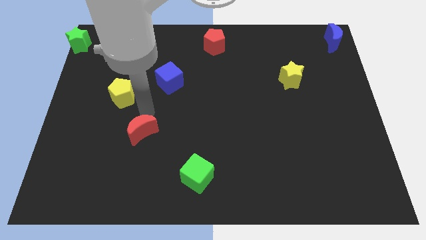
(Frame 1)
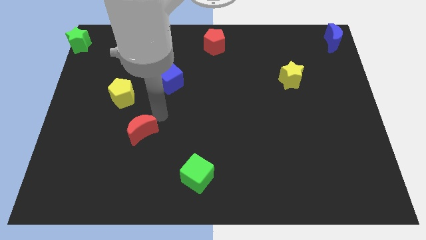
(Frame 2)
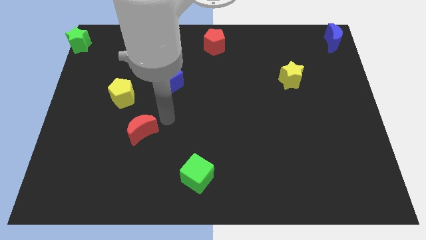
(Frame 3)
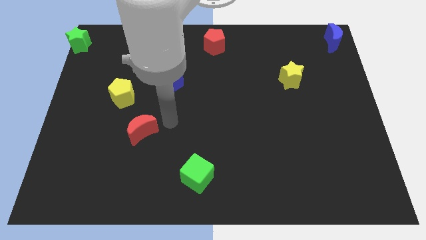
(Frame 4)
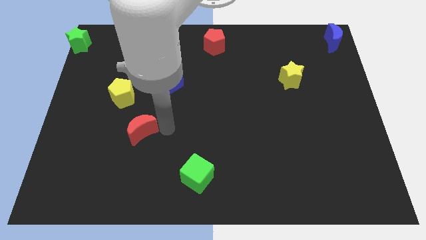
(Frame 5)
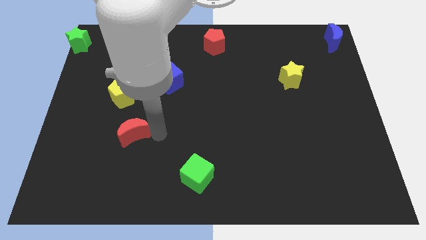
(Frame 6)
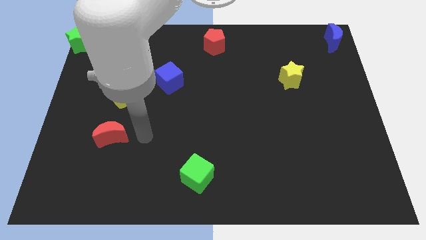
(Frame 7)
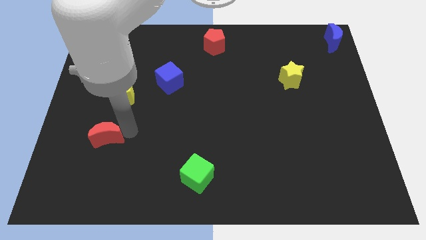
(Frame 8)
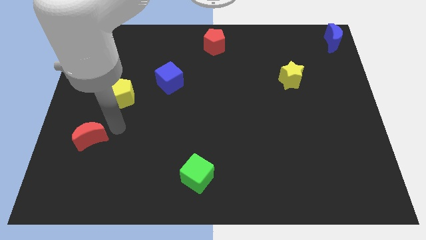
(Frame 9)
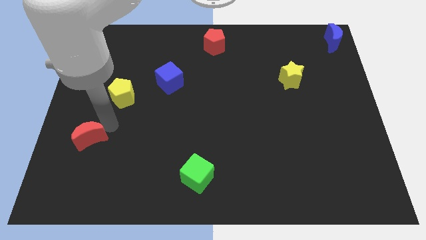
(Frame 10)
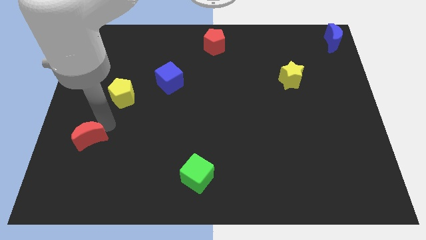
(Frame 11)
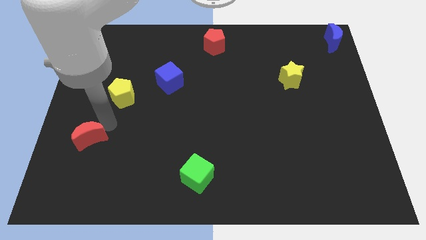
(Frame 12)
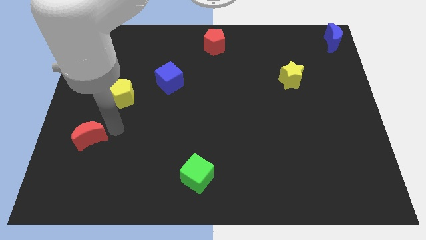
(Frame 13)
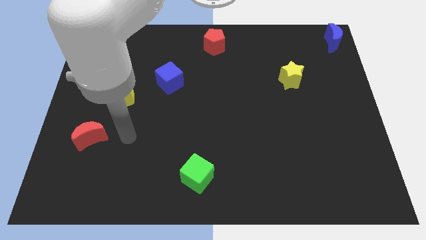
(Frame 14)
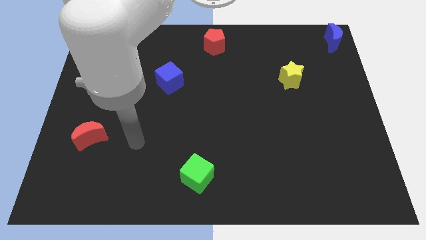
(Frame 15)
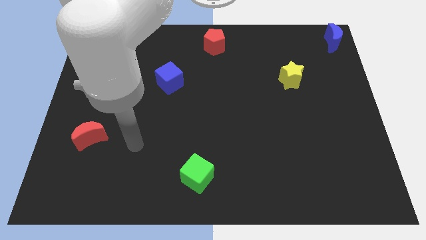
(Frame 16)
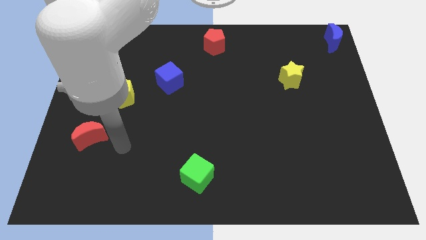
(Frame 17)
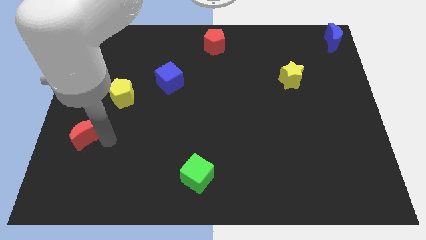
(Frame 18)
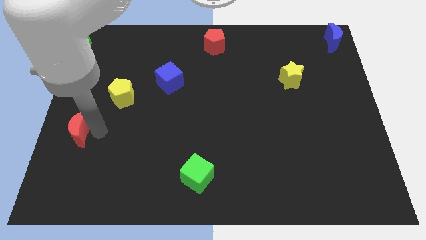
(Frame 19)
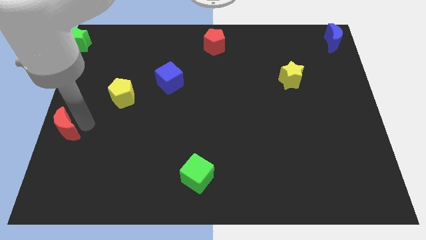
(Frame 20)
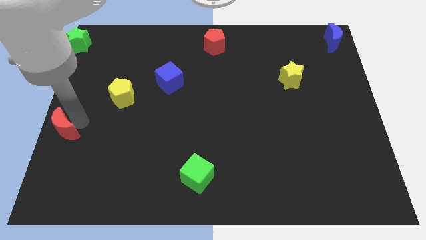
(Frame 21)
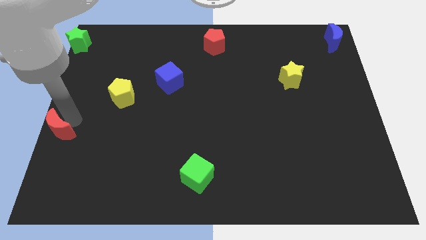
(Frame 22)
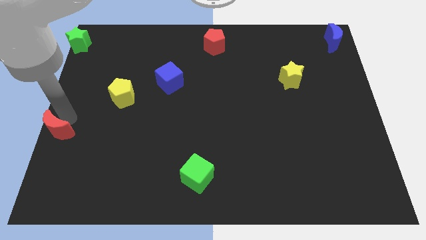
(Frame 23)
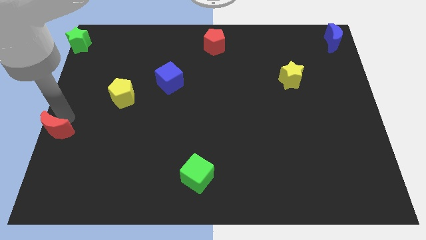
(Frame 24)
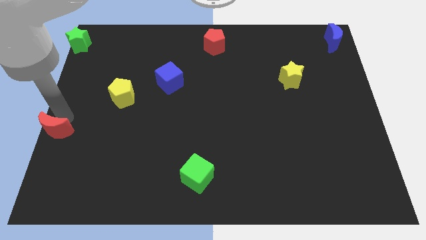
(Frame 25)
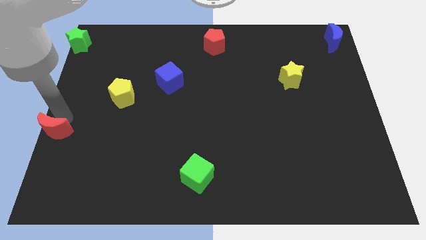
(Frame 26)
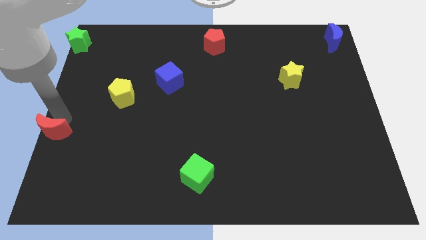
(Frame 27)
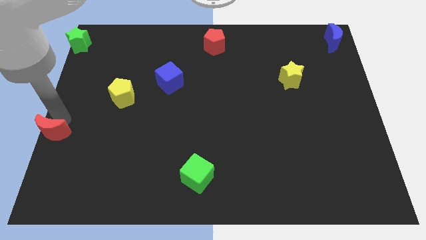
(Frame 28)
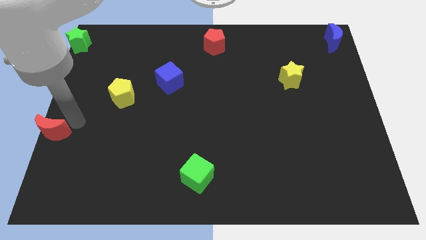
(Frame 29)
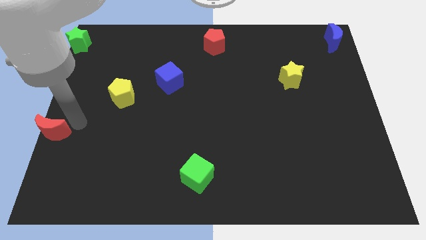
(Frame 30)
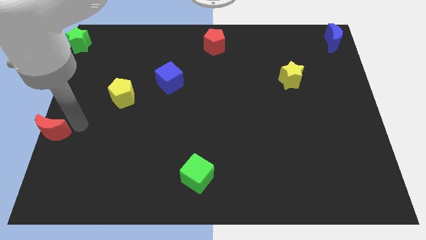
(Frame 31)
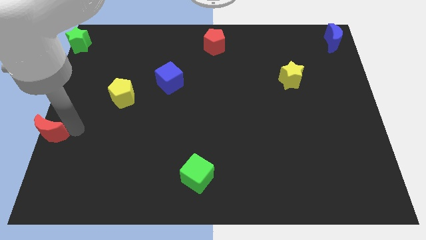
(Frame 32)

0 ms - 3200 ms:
place the red crescent at the center left of the board

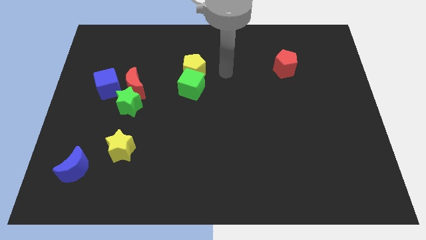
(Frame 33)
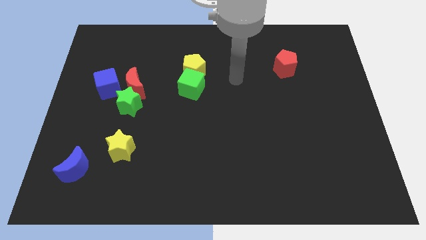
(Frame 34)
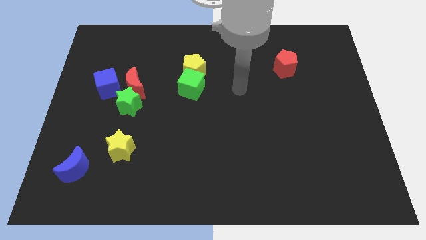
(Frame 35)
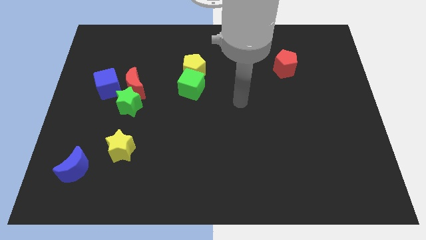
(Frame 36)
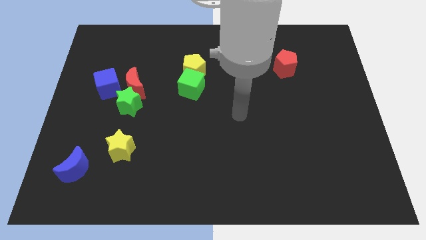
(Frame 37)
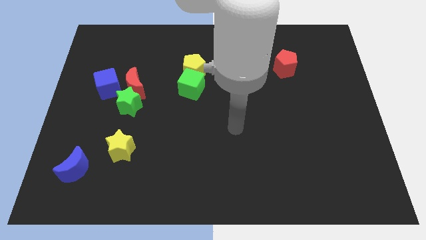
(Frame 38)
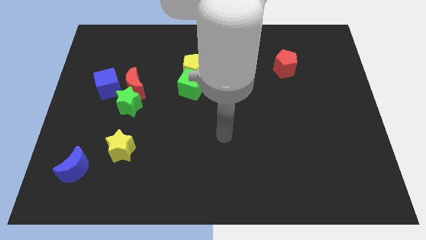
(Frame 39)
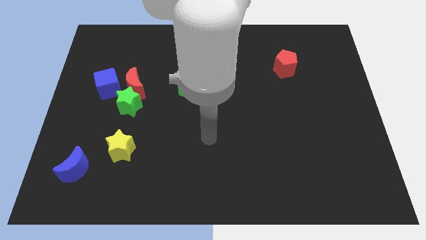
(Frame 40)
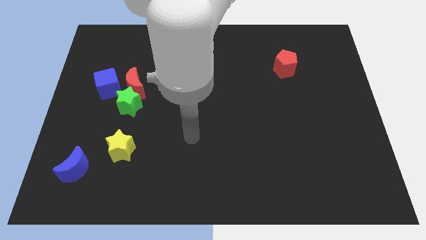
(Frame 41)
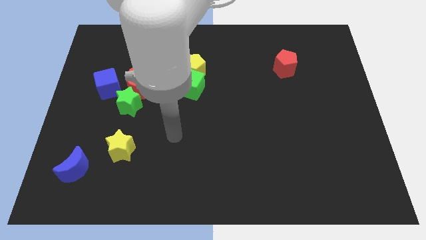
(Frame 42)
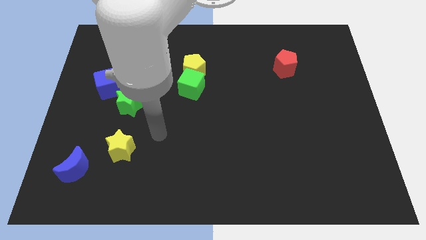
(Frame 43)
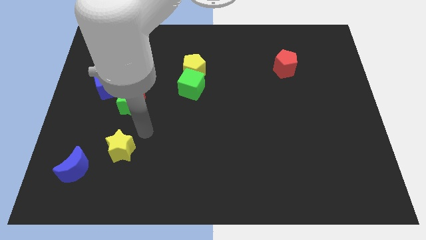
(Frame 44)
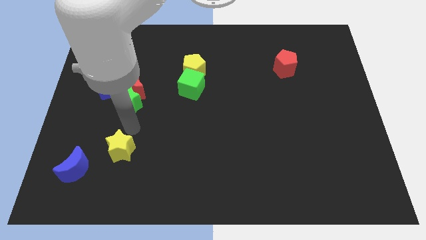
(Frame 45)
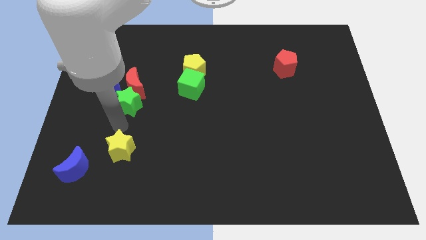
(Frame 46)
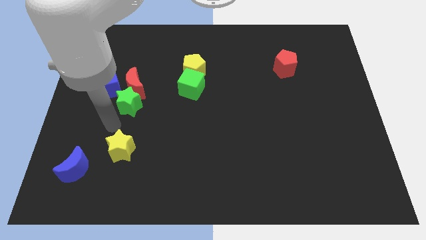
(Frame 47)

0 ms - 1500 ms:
place your arm to the top of the yellow star

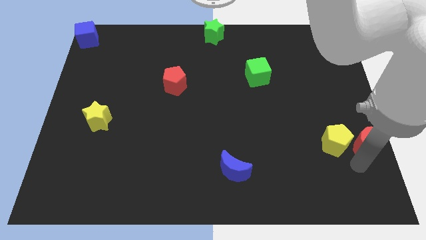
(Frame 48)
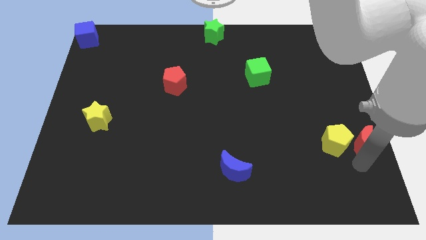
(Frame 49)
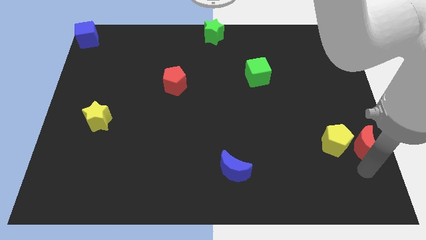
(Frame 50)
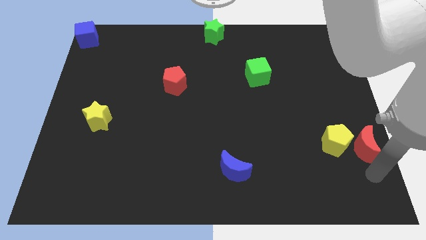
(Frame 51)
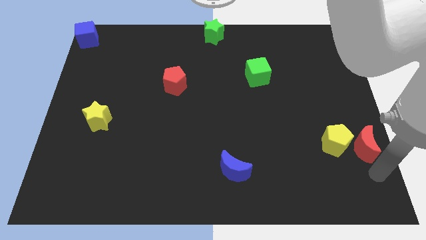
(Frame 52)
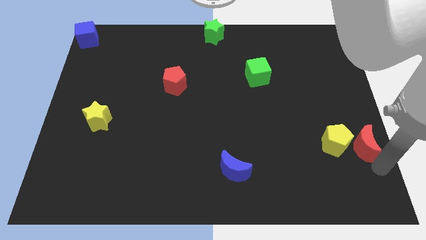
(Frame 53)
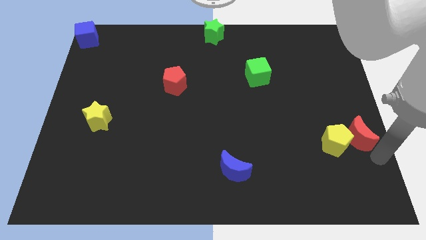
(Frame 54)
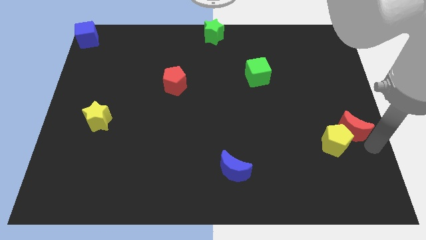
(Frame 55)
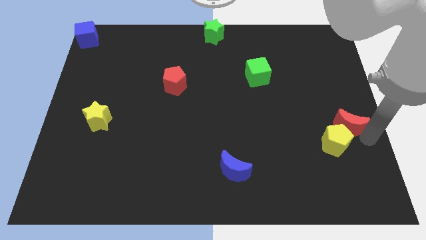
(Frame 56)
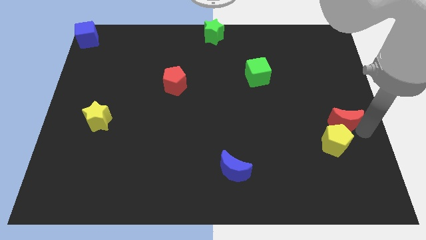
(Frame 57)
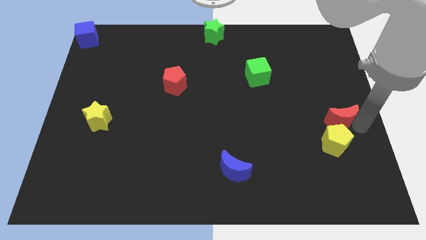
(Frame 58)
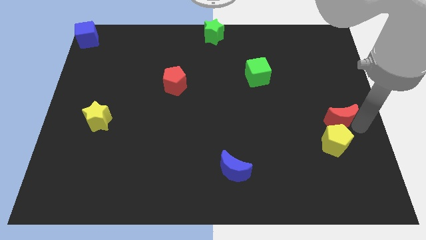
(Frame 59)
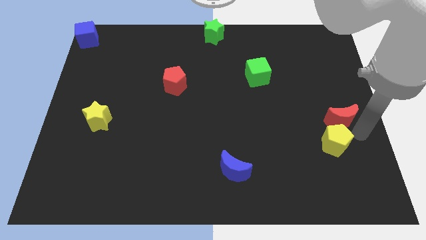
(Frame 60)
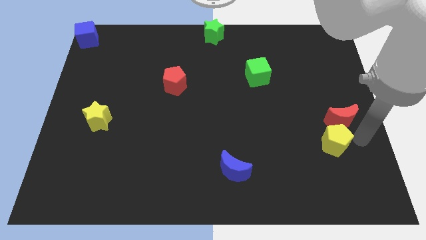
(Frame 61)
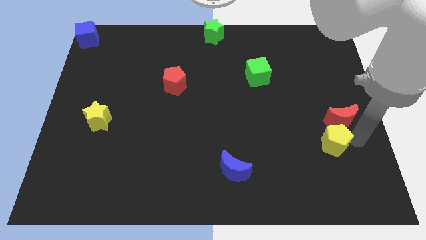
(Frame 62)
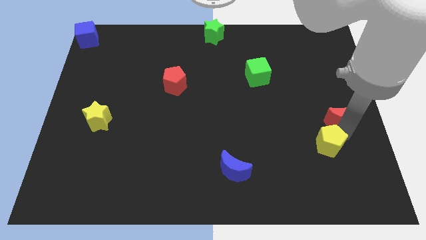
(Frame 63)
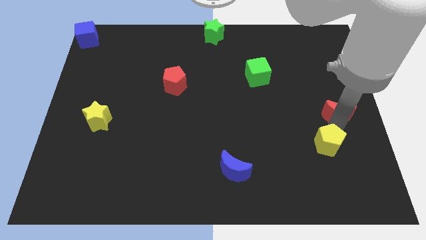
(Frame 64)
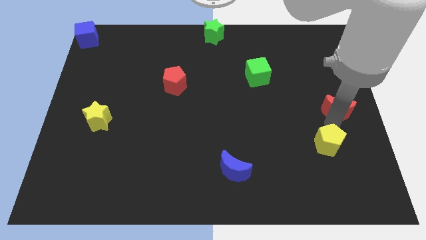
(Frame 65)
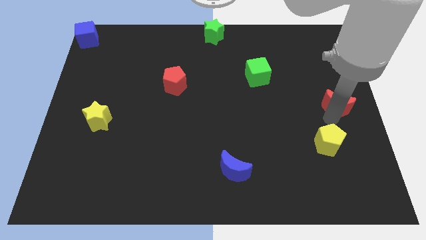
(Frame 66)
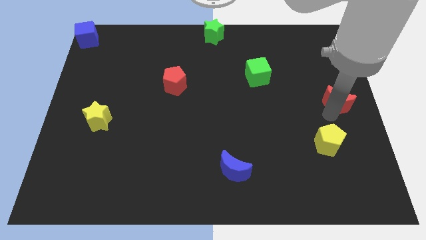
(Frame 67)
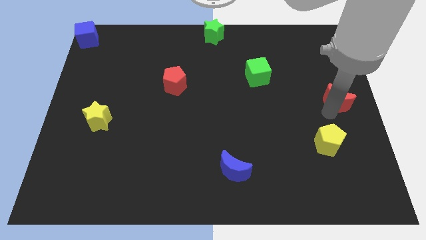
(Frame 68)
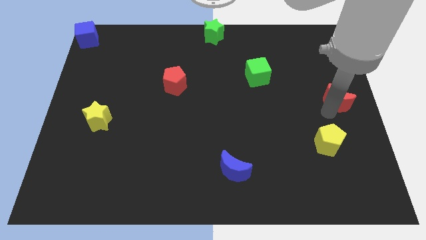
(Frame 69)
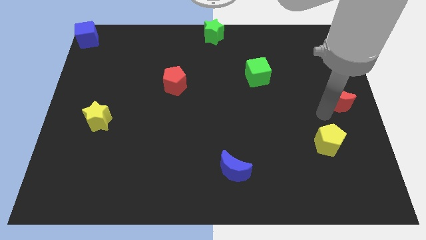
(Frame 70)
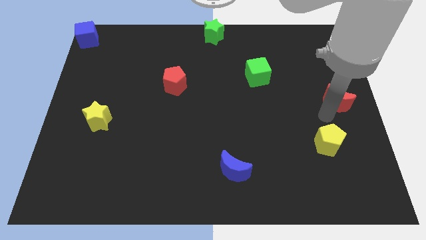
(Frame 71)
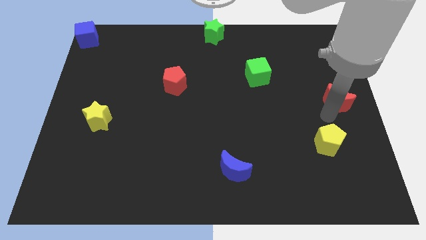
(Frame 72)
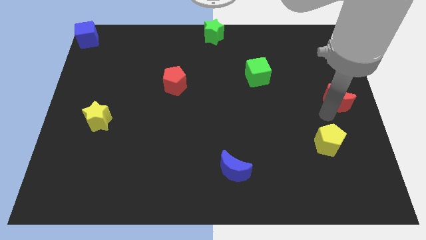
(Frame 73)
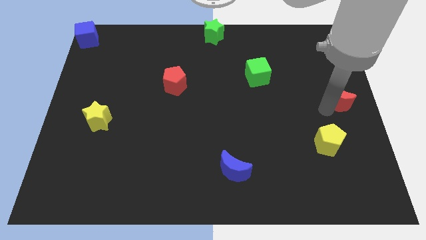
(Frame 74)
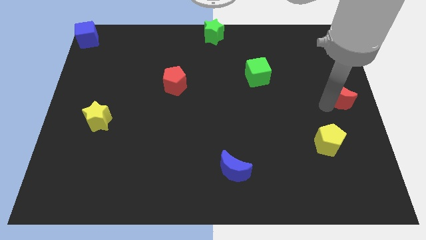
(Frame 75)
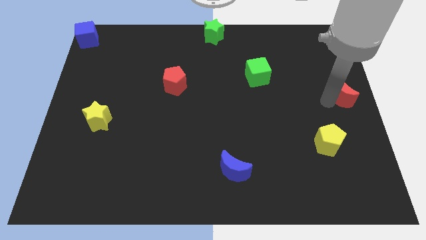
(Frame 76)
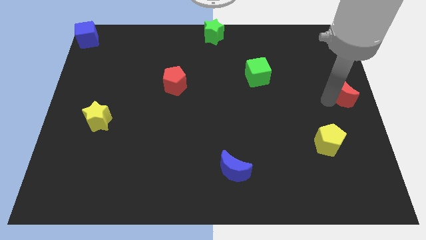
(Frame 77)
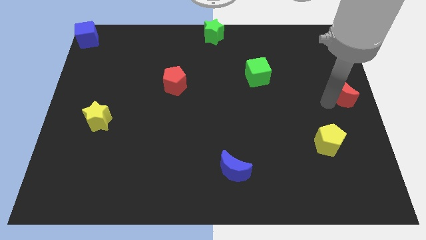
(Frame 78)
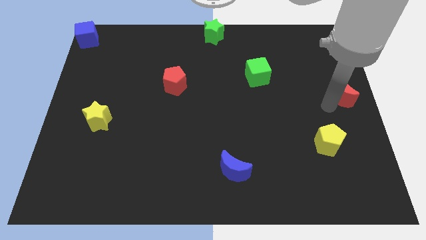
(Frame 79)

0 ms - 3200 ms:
push red moon upwards to the top

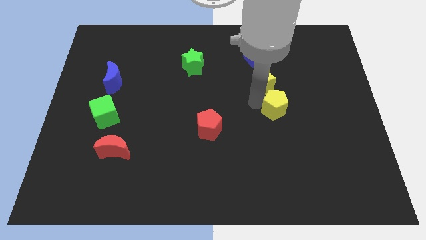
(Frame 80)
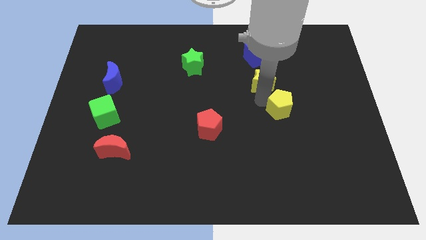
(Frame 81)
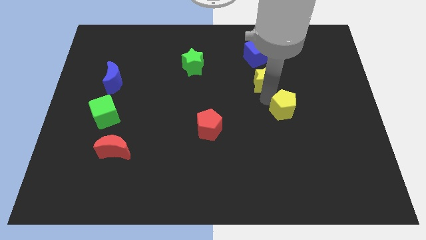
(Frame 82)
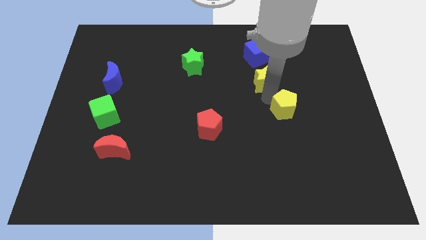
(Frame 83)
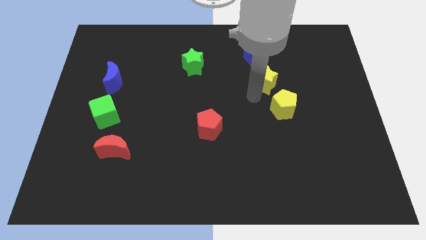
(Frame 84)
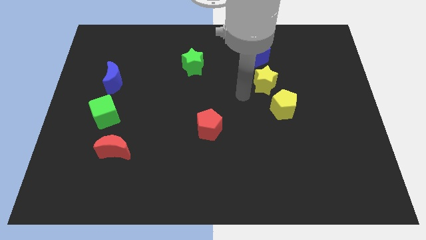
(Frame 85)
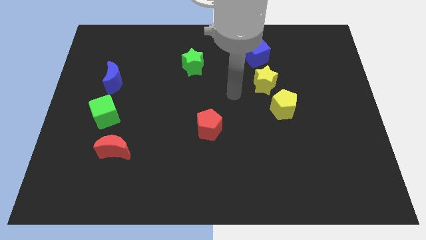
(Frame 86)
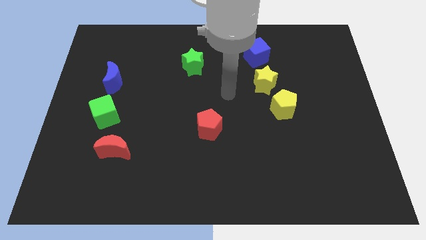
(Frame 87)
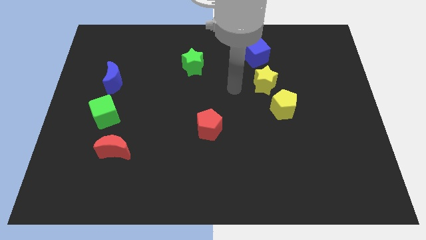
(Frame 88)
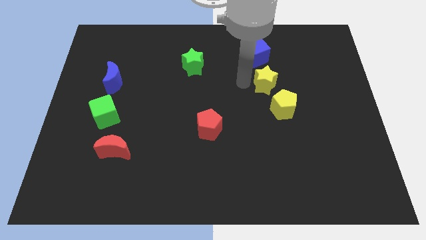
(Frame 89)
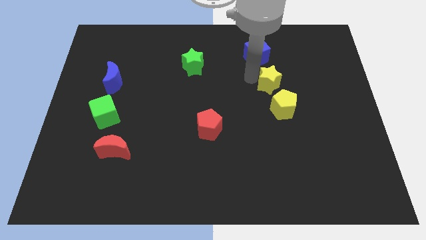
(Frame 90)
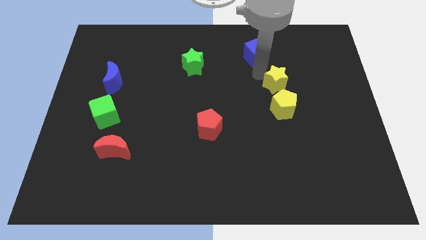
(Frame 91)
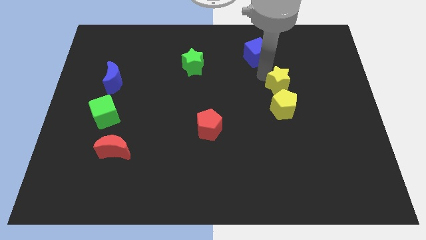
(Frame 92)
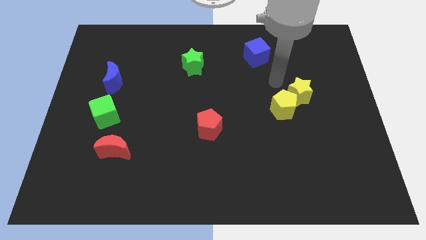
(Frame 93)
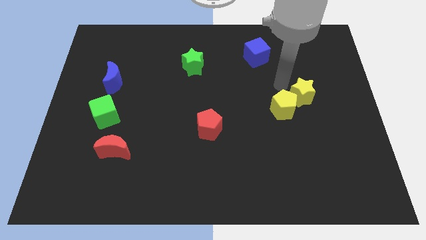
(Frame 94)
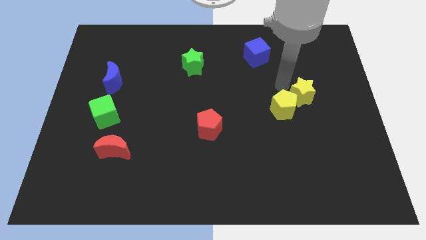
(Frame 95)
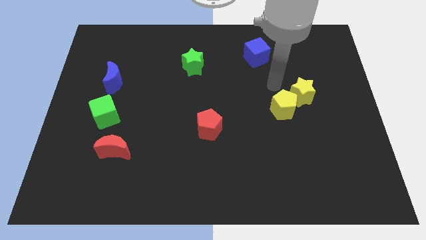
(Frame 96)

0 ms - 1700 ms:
push the yellow blocks towards the center right
